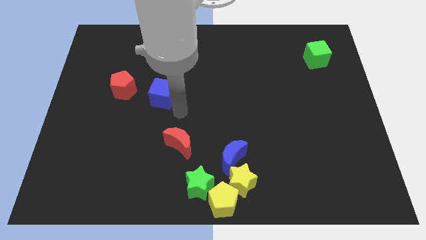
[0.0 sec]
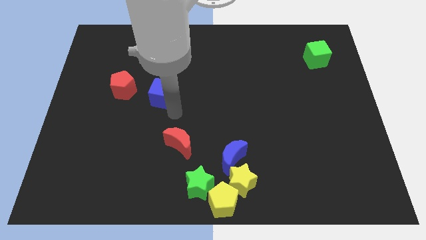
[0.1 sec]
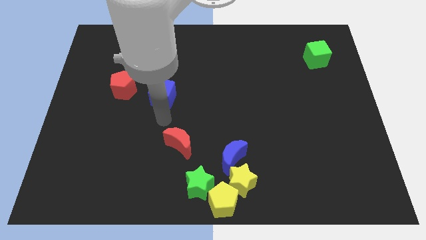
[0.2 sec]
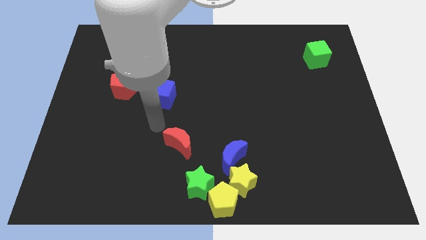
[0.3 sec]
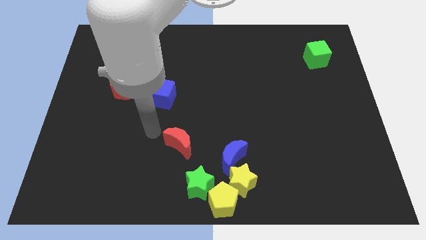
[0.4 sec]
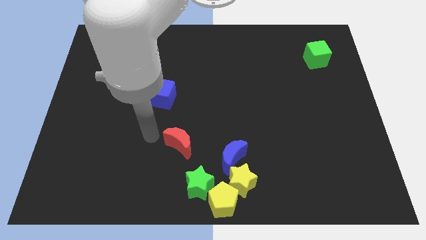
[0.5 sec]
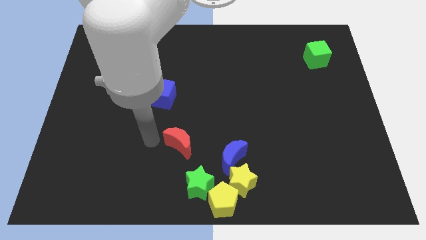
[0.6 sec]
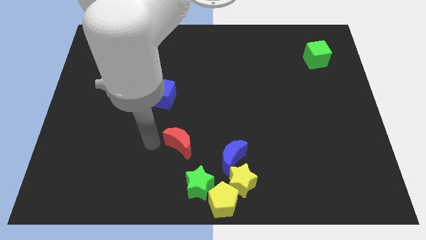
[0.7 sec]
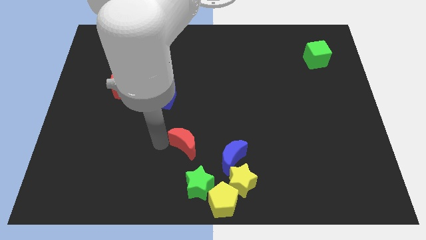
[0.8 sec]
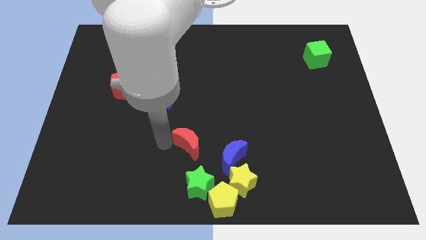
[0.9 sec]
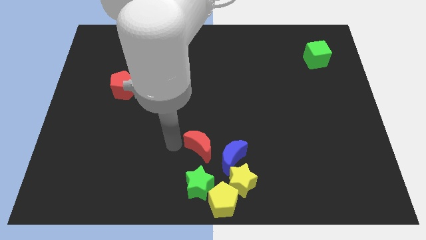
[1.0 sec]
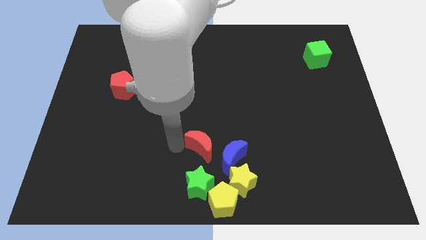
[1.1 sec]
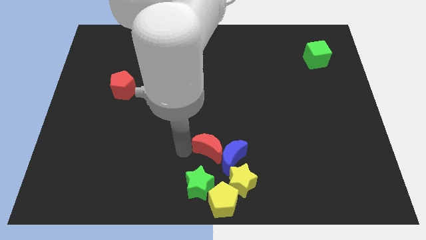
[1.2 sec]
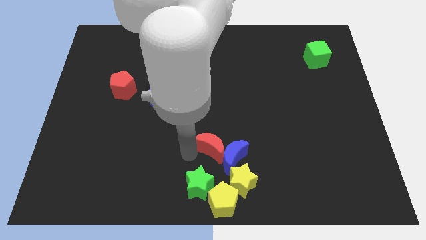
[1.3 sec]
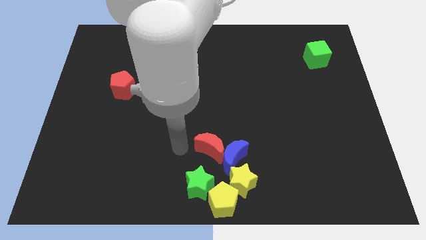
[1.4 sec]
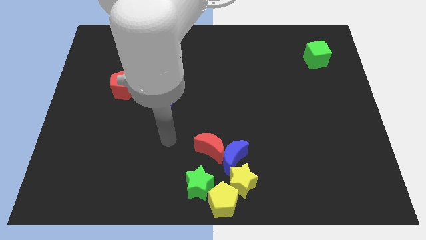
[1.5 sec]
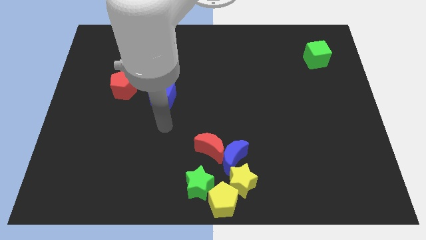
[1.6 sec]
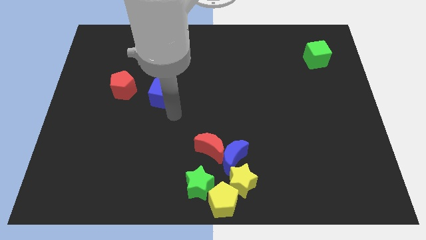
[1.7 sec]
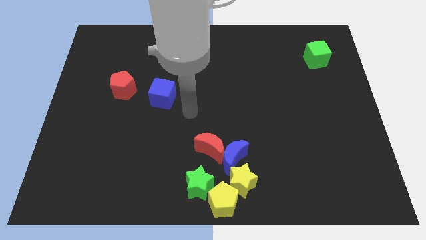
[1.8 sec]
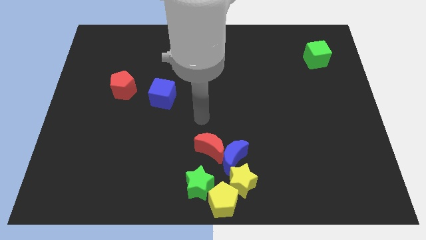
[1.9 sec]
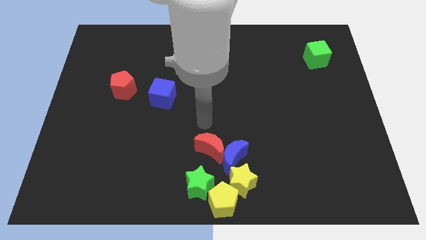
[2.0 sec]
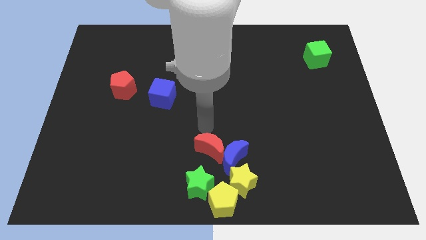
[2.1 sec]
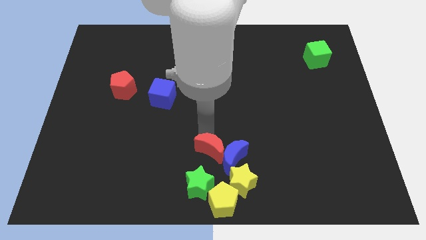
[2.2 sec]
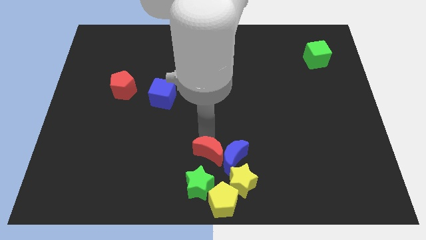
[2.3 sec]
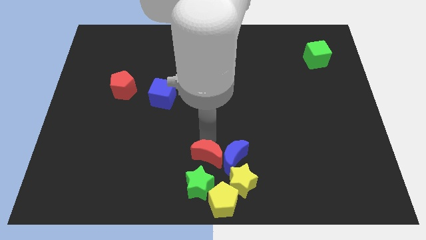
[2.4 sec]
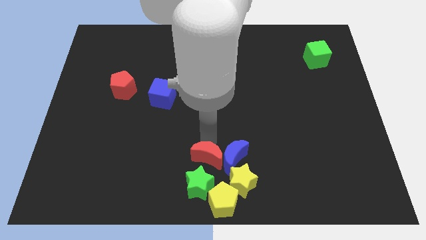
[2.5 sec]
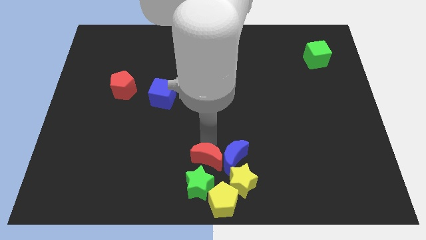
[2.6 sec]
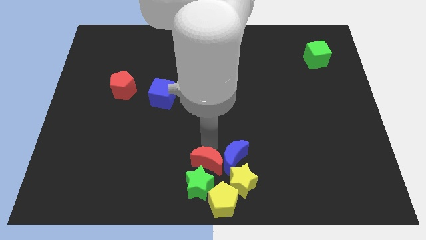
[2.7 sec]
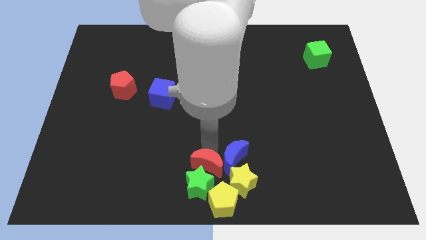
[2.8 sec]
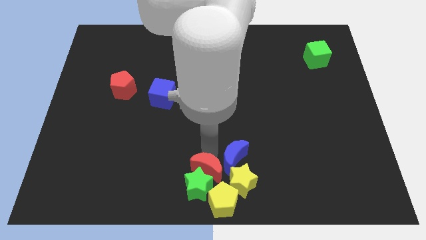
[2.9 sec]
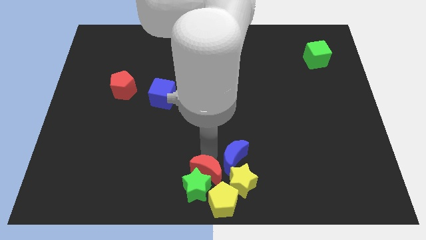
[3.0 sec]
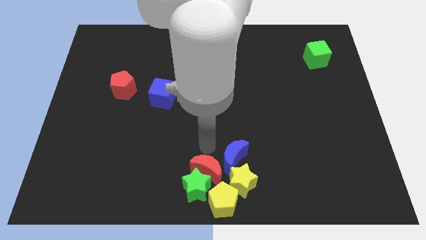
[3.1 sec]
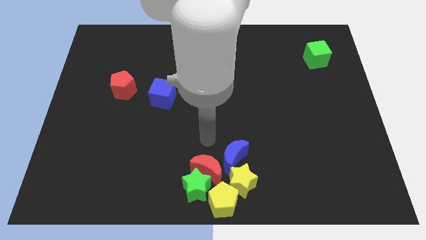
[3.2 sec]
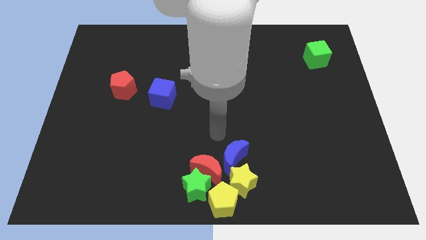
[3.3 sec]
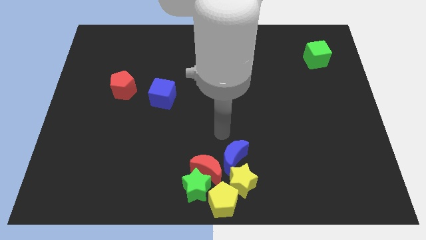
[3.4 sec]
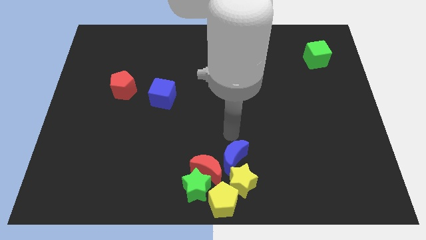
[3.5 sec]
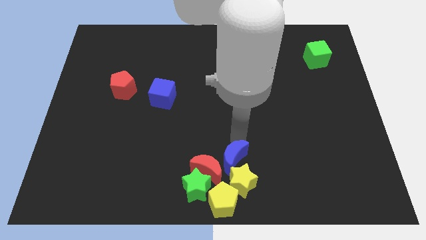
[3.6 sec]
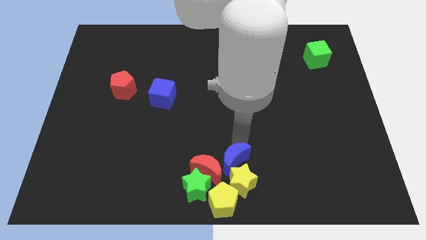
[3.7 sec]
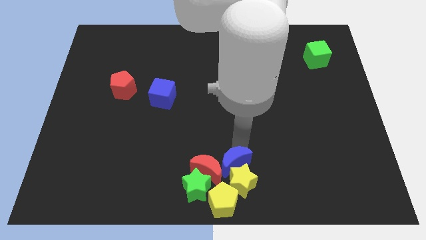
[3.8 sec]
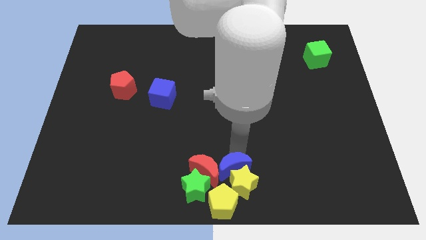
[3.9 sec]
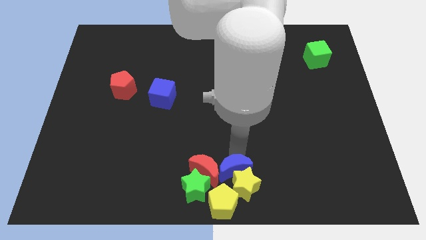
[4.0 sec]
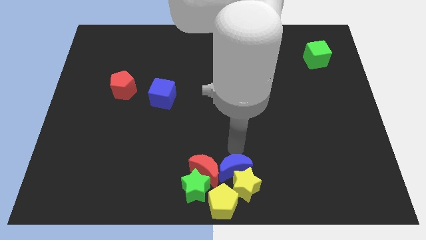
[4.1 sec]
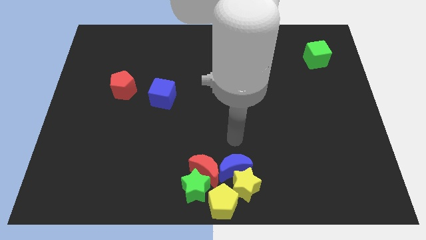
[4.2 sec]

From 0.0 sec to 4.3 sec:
push the blue crescent and red crescent into the group of blocks

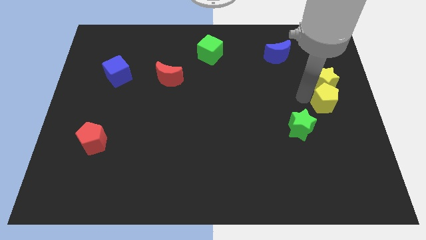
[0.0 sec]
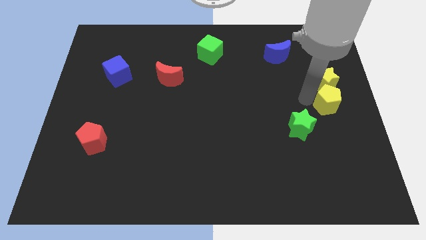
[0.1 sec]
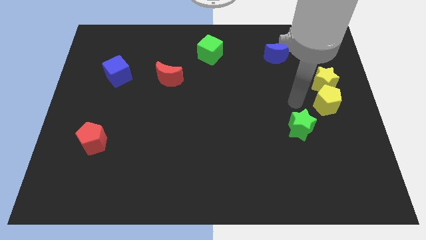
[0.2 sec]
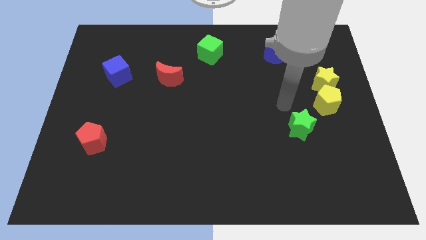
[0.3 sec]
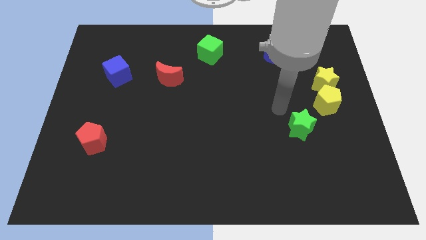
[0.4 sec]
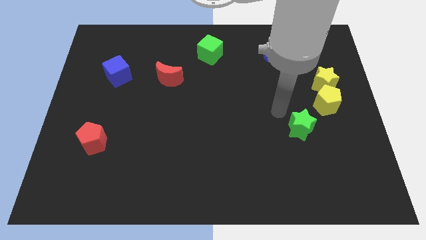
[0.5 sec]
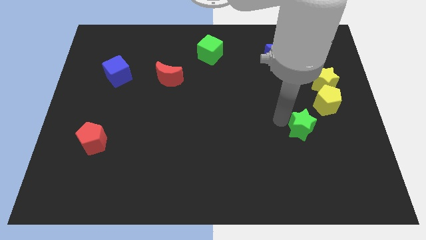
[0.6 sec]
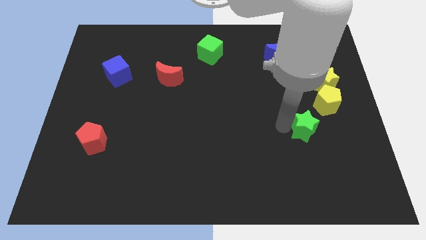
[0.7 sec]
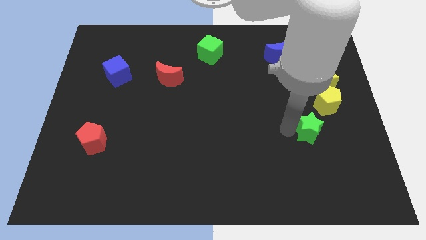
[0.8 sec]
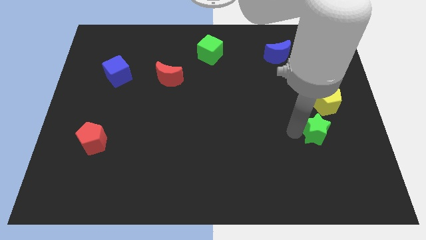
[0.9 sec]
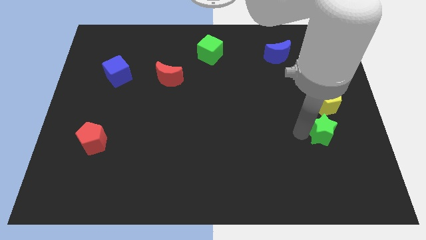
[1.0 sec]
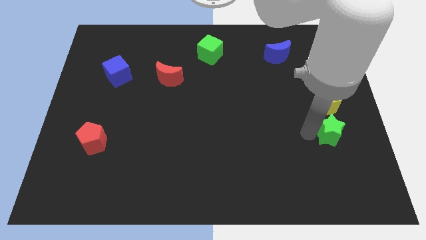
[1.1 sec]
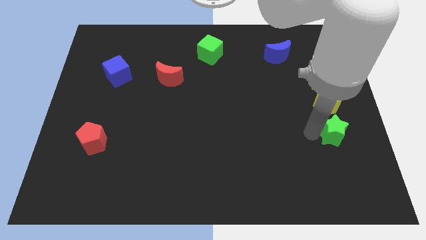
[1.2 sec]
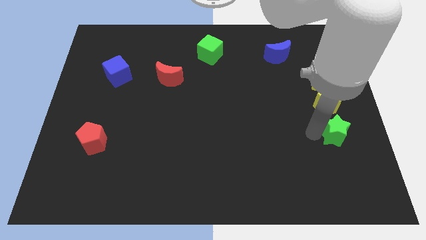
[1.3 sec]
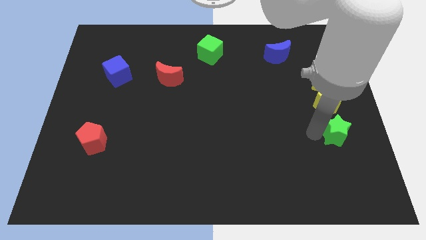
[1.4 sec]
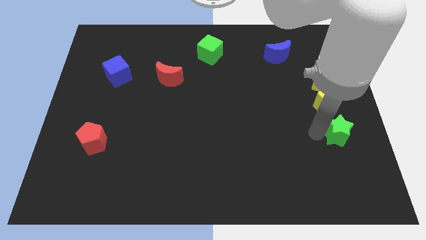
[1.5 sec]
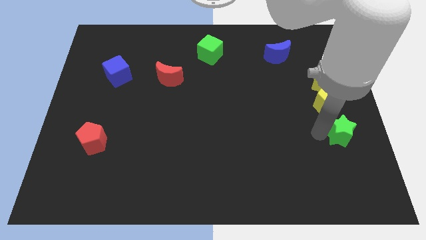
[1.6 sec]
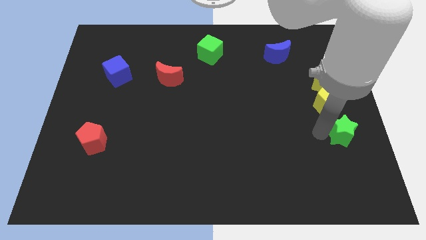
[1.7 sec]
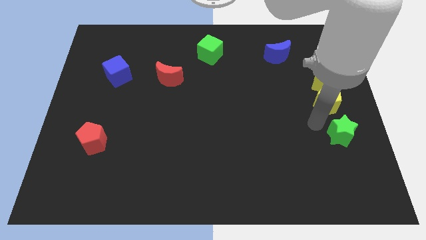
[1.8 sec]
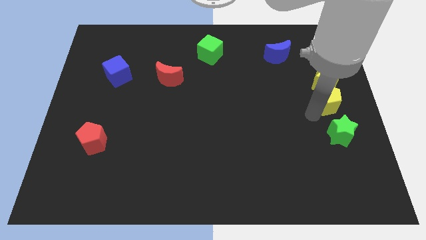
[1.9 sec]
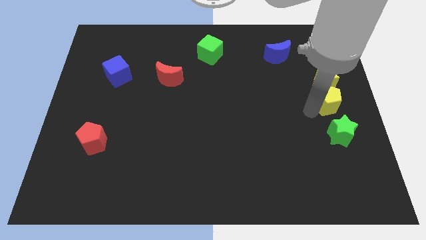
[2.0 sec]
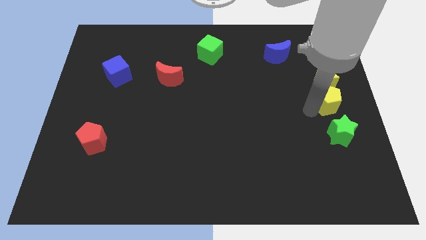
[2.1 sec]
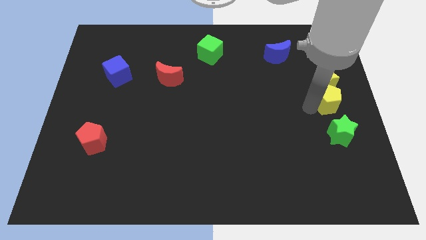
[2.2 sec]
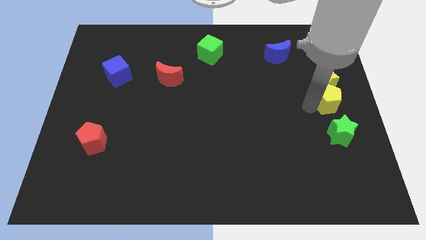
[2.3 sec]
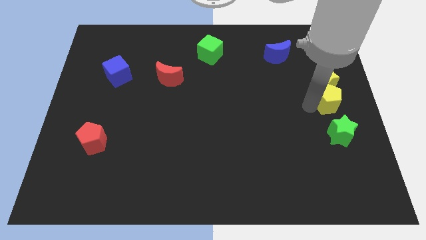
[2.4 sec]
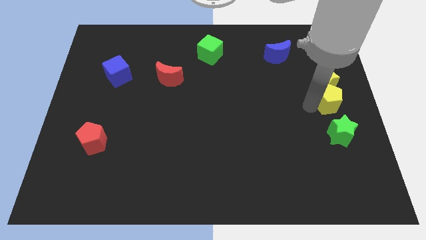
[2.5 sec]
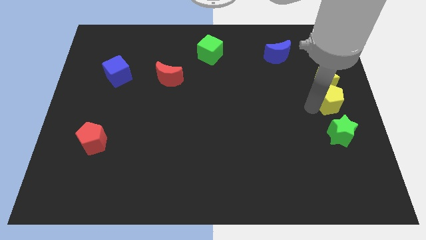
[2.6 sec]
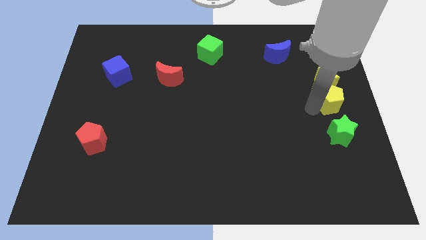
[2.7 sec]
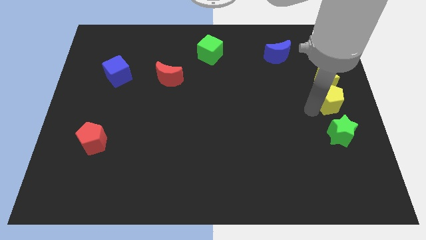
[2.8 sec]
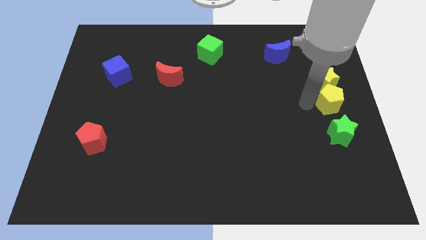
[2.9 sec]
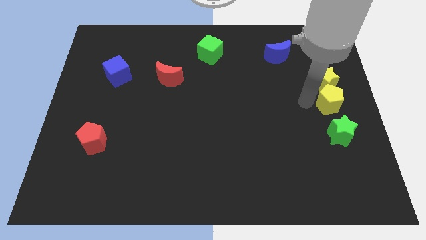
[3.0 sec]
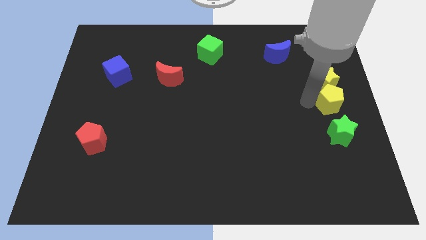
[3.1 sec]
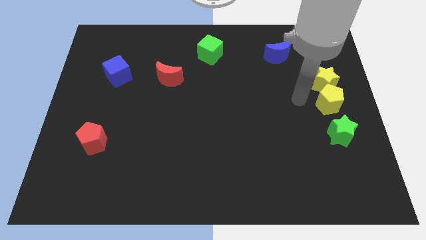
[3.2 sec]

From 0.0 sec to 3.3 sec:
place green star yellow pentagon and yellow star in a line

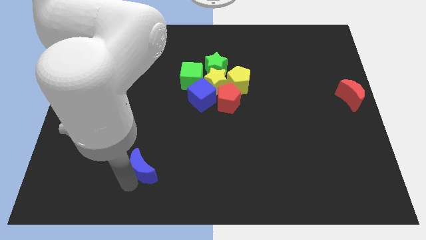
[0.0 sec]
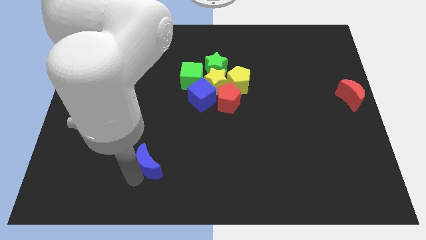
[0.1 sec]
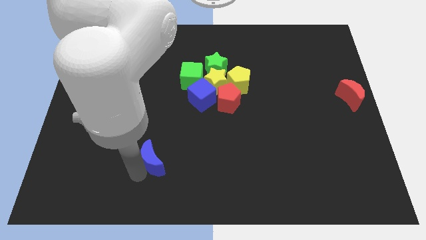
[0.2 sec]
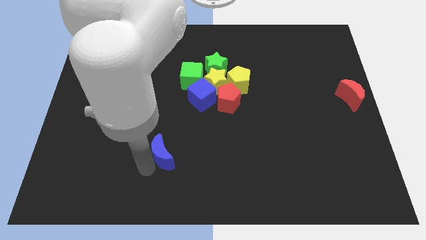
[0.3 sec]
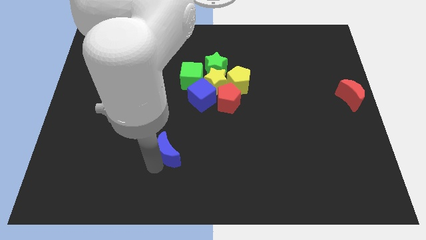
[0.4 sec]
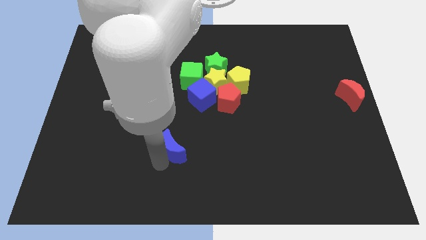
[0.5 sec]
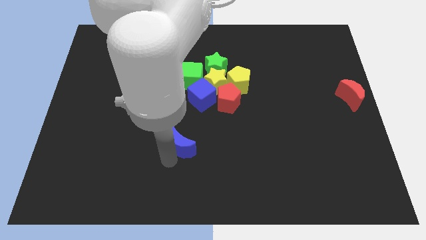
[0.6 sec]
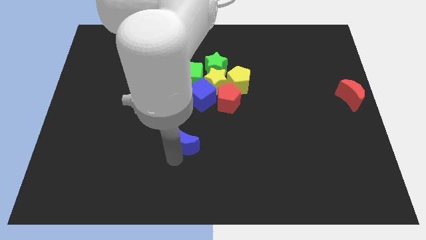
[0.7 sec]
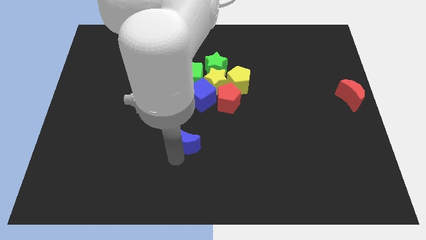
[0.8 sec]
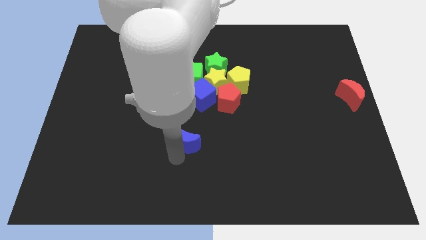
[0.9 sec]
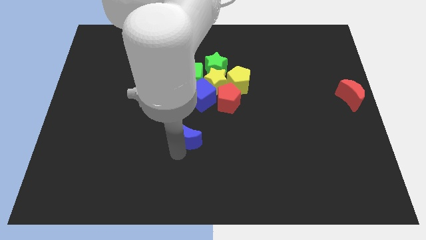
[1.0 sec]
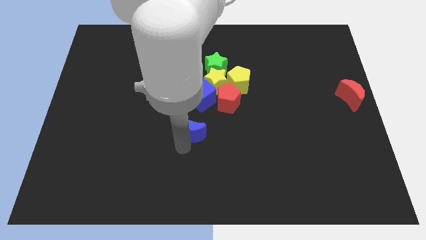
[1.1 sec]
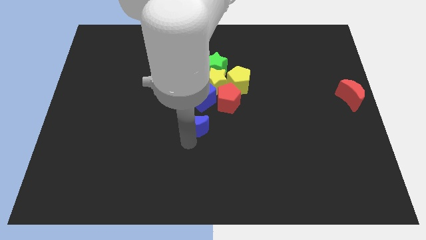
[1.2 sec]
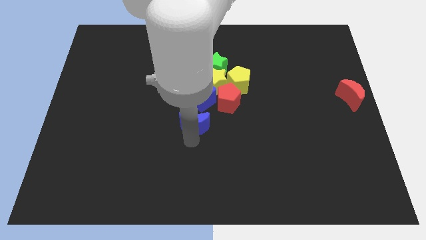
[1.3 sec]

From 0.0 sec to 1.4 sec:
place blue moon to the bottom of blue cube
